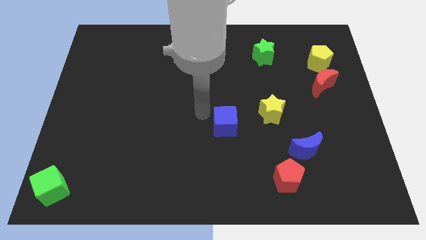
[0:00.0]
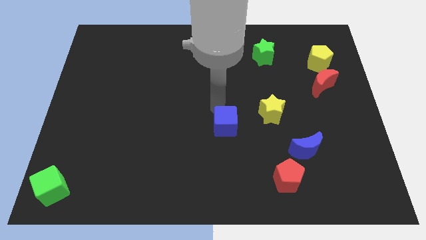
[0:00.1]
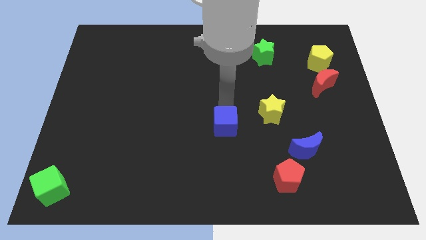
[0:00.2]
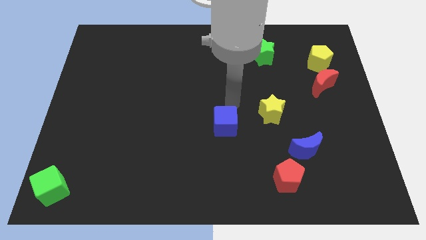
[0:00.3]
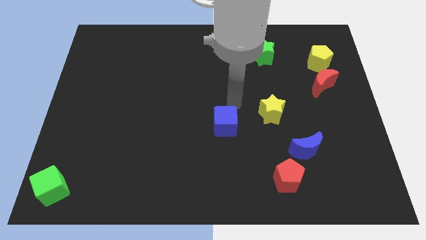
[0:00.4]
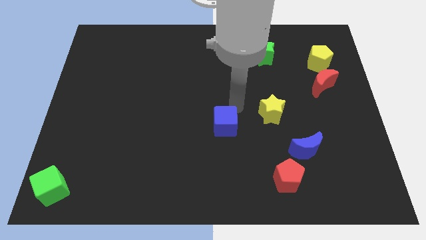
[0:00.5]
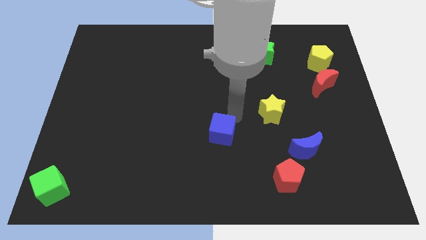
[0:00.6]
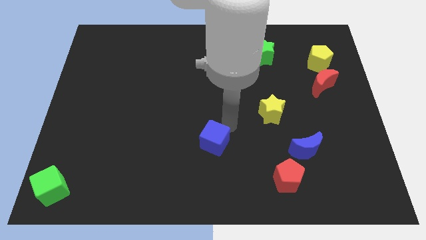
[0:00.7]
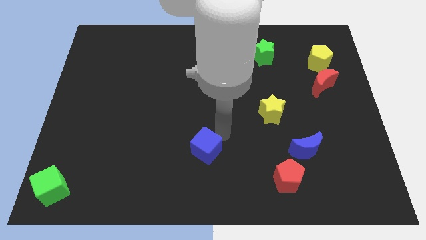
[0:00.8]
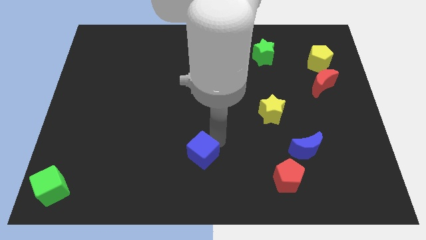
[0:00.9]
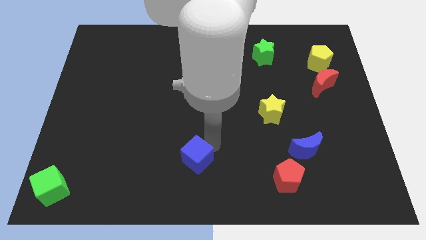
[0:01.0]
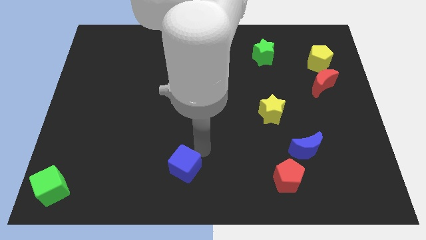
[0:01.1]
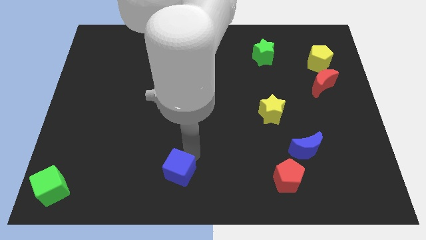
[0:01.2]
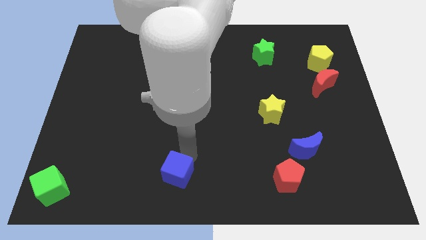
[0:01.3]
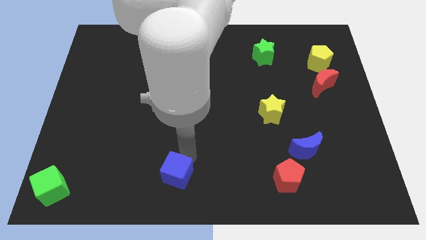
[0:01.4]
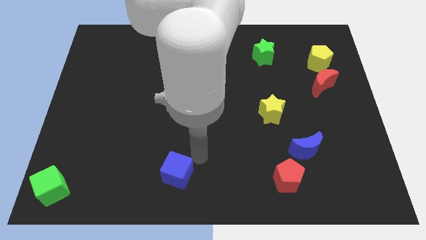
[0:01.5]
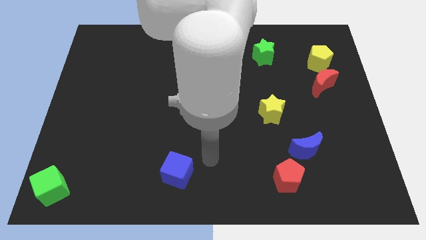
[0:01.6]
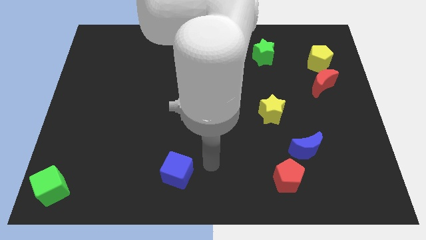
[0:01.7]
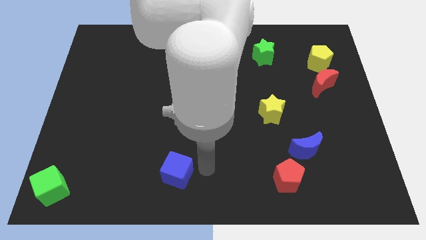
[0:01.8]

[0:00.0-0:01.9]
place the blue cube to the left of the red pentagon

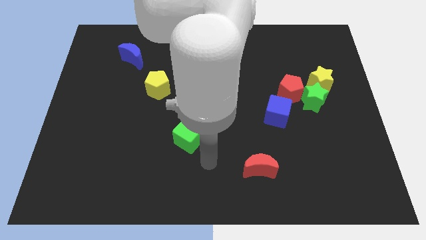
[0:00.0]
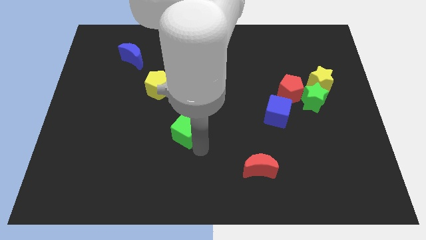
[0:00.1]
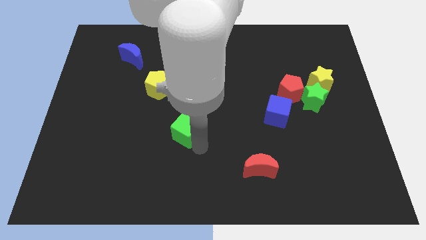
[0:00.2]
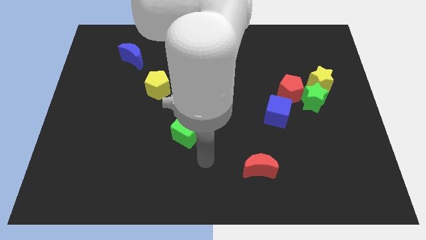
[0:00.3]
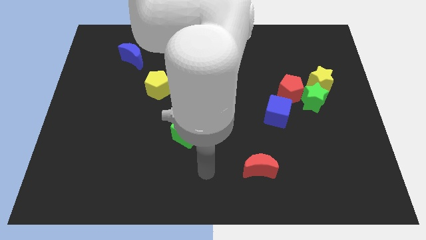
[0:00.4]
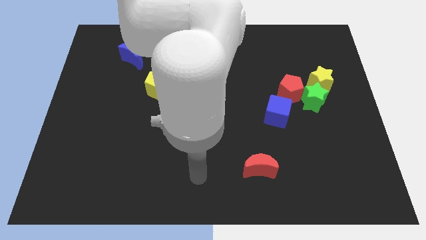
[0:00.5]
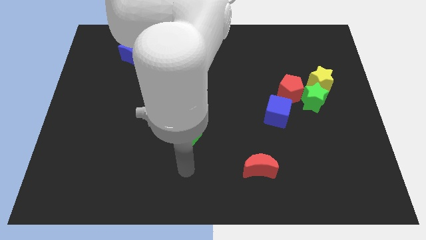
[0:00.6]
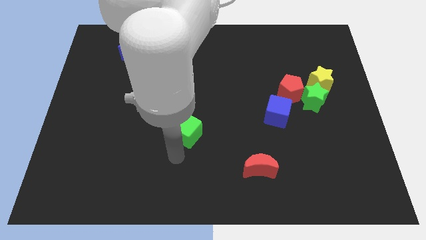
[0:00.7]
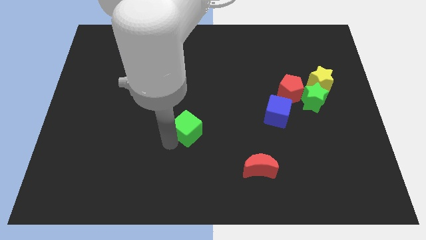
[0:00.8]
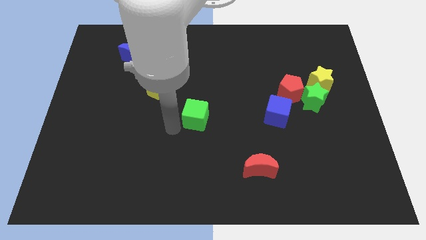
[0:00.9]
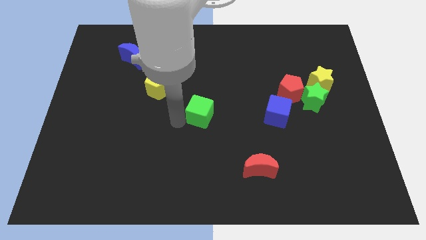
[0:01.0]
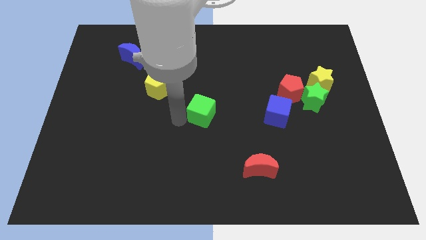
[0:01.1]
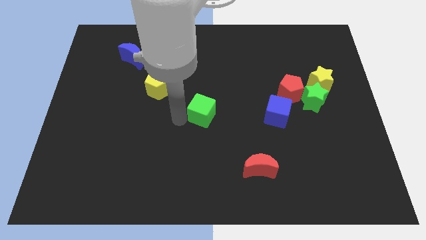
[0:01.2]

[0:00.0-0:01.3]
push the green square towards the center of the board

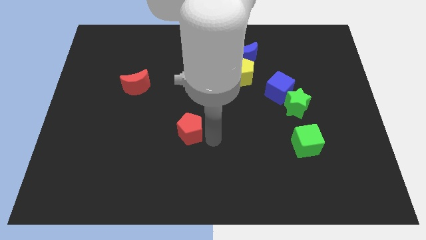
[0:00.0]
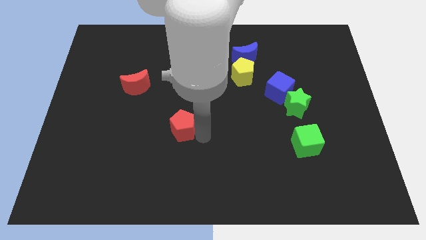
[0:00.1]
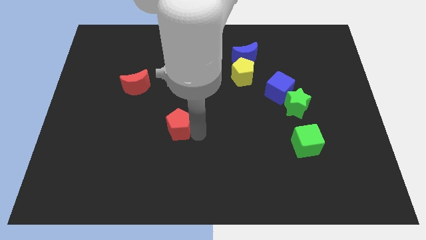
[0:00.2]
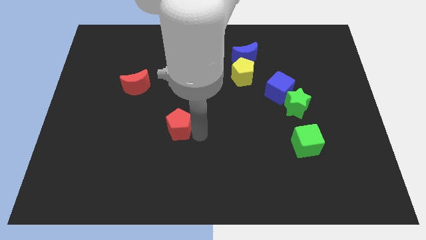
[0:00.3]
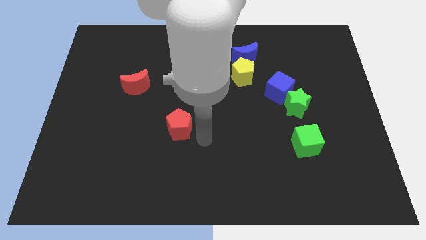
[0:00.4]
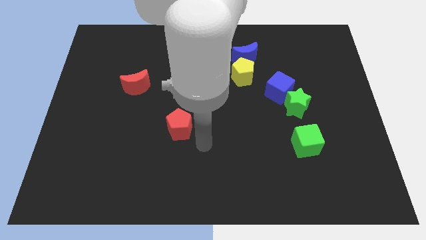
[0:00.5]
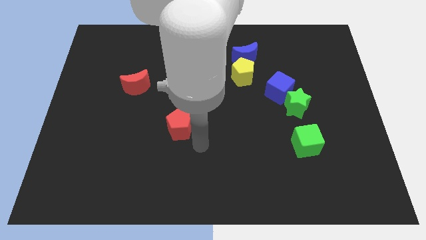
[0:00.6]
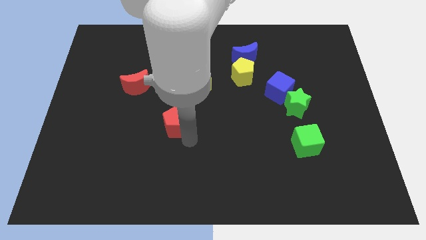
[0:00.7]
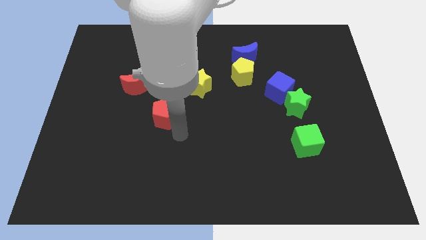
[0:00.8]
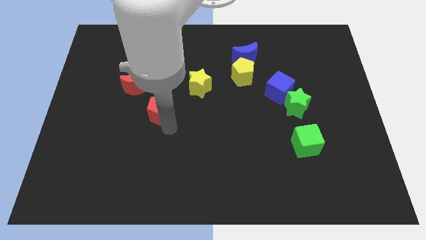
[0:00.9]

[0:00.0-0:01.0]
move the red pentagon diagonally left of the yellow star

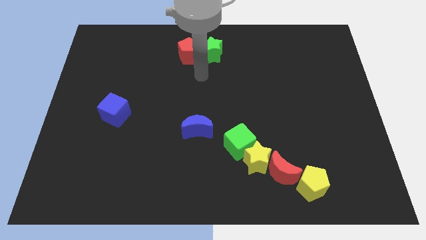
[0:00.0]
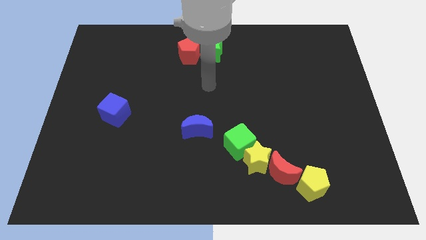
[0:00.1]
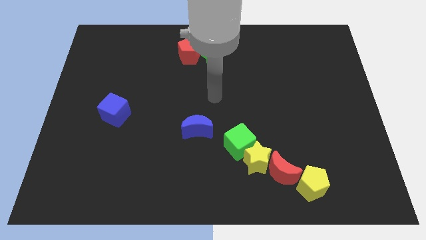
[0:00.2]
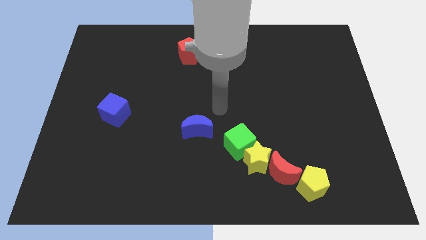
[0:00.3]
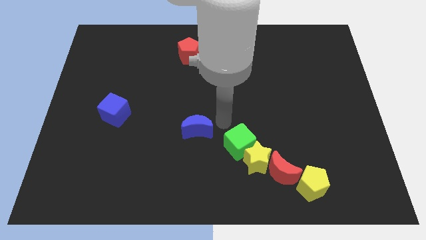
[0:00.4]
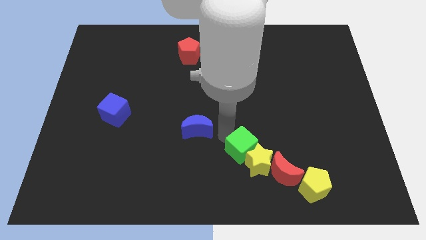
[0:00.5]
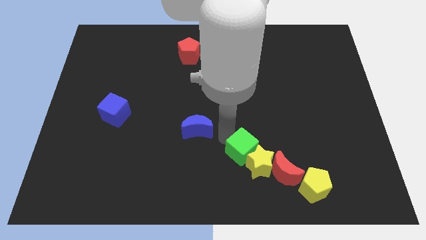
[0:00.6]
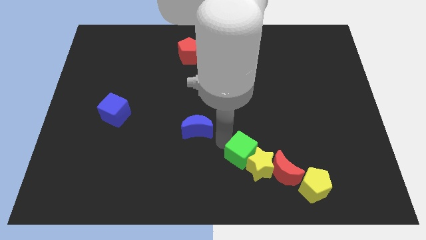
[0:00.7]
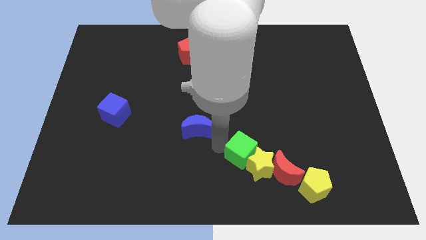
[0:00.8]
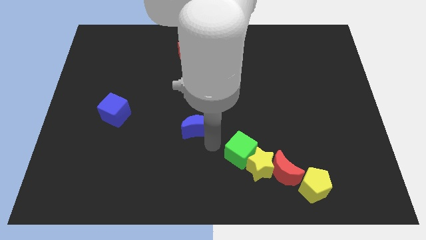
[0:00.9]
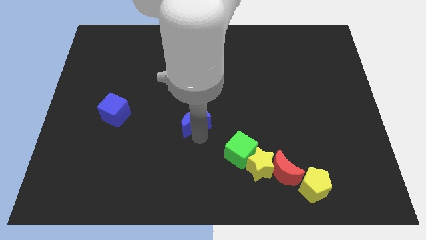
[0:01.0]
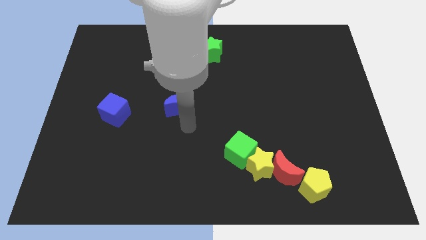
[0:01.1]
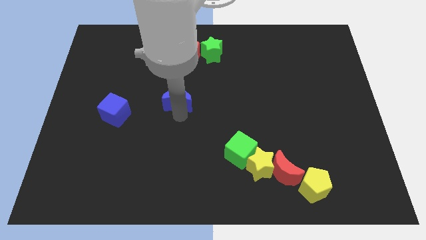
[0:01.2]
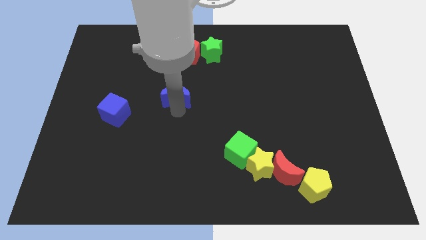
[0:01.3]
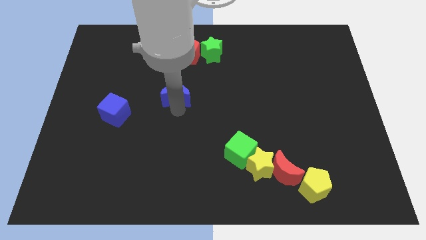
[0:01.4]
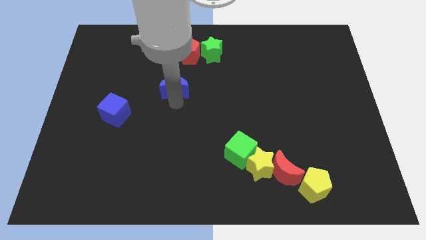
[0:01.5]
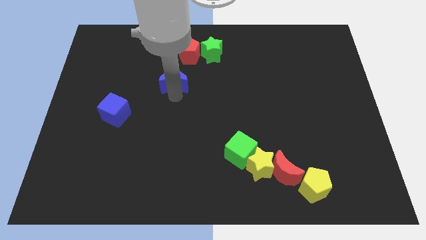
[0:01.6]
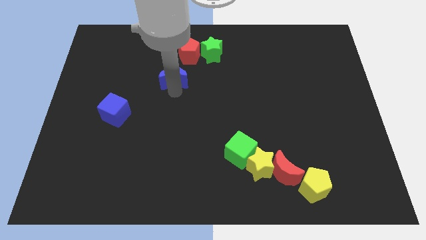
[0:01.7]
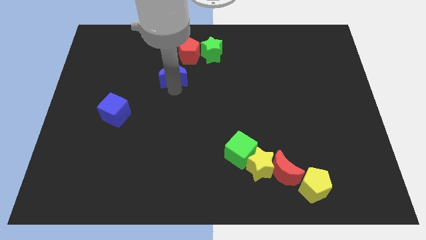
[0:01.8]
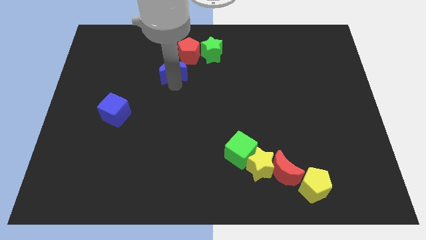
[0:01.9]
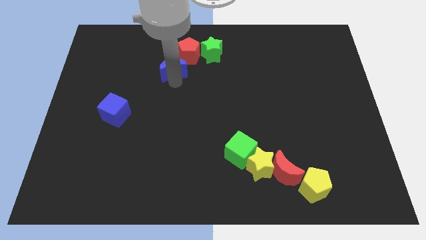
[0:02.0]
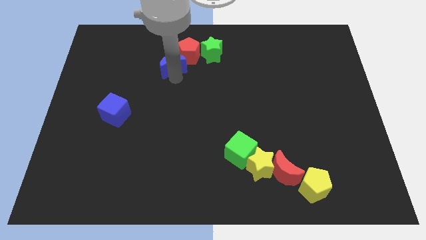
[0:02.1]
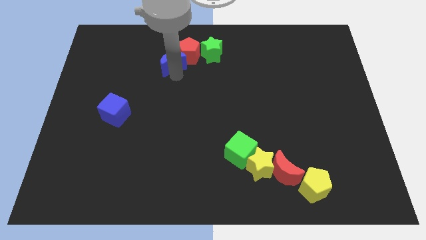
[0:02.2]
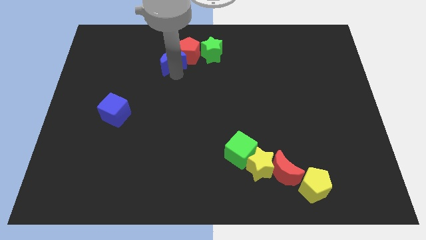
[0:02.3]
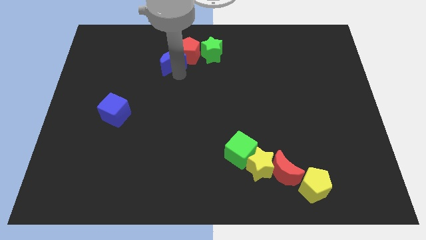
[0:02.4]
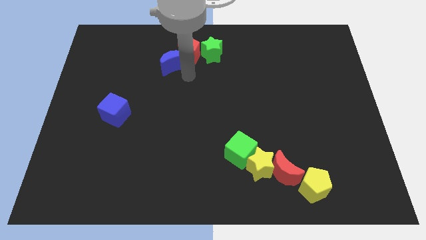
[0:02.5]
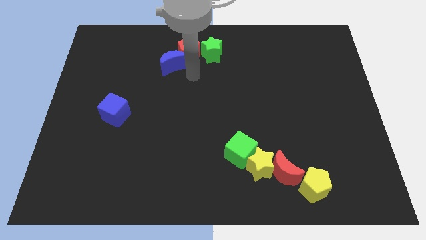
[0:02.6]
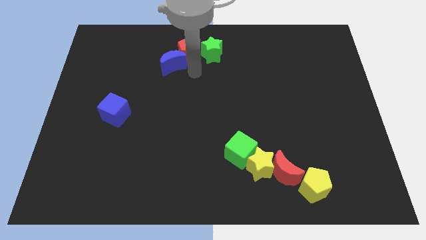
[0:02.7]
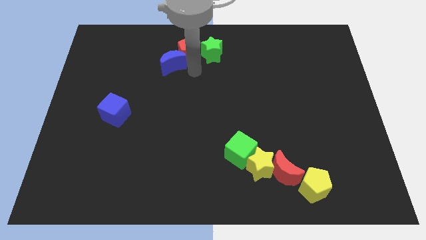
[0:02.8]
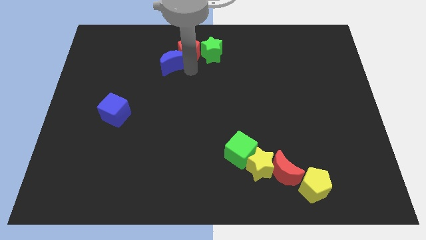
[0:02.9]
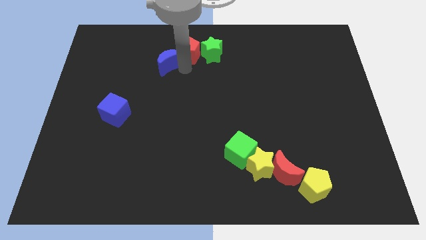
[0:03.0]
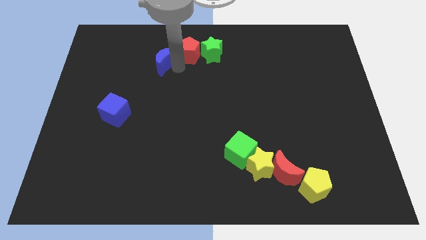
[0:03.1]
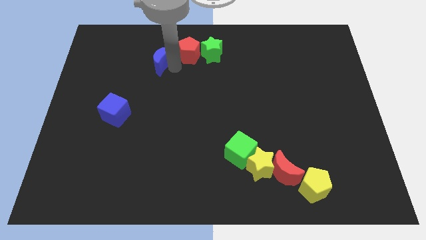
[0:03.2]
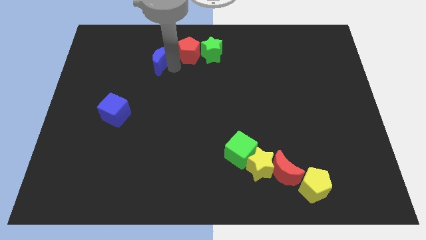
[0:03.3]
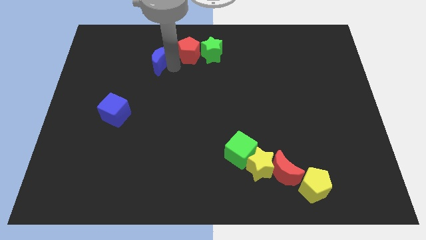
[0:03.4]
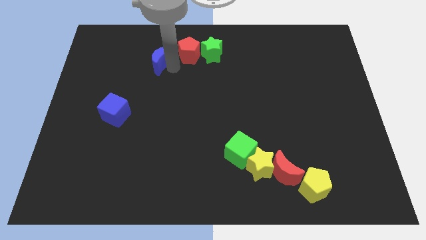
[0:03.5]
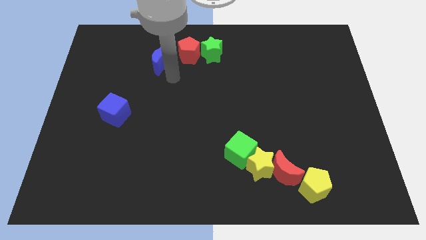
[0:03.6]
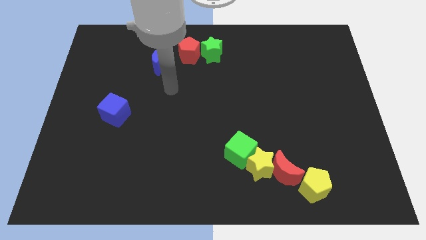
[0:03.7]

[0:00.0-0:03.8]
put the blue moon at the bottom left side of the red pentagon

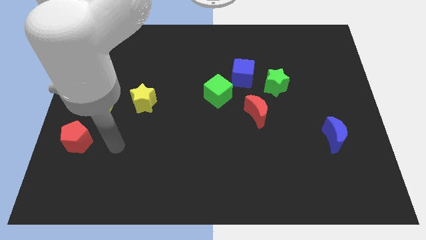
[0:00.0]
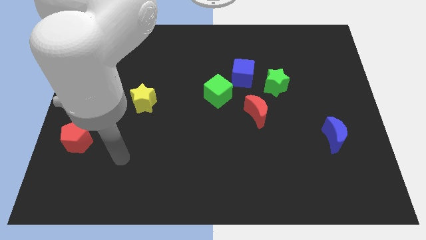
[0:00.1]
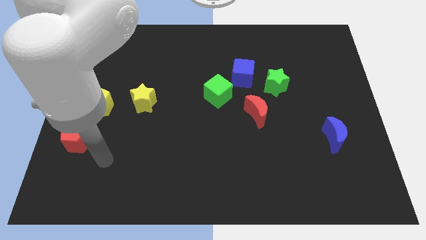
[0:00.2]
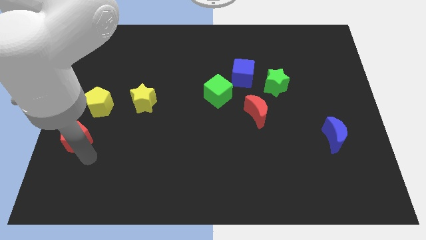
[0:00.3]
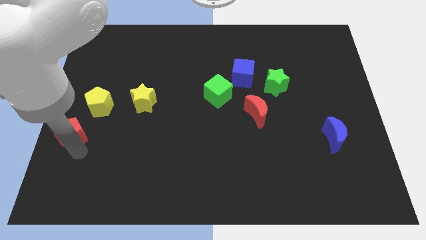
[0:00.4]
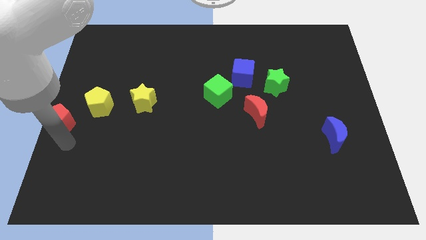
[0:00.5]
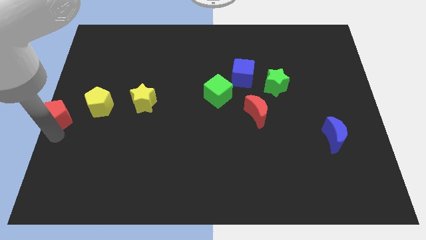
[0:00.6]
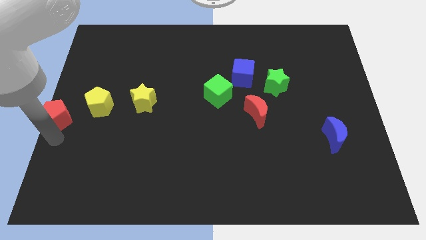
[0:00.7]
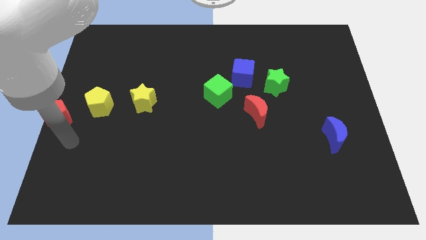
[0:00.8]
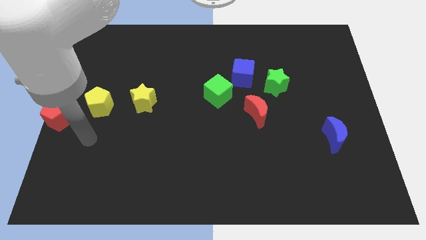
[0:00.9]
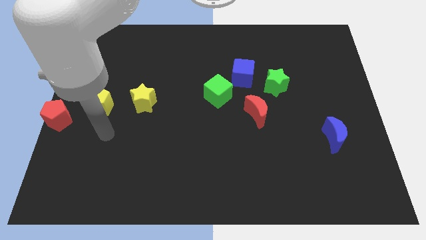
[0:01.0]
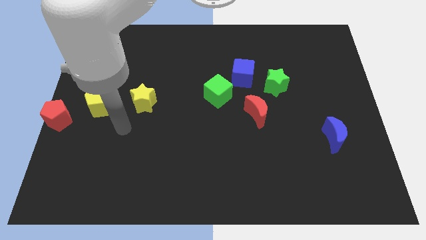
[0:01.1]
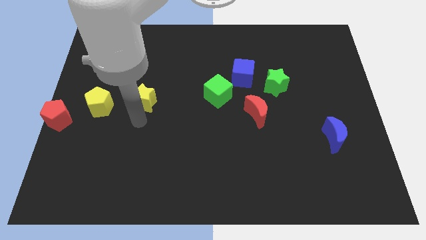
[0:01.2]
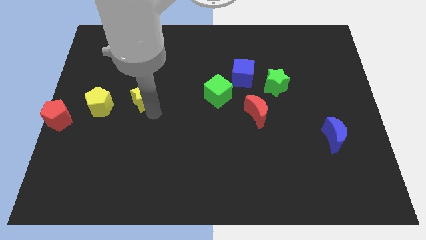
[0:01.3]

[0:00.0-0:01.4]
push the red pentagon towards the center left side of the board
